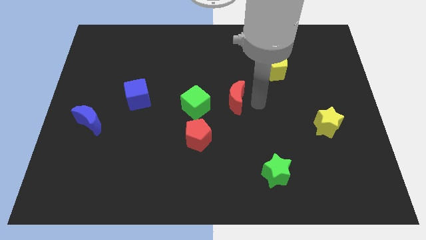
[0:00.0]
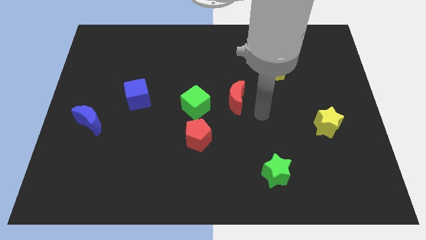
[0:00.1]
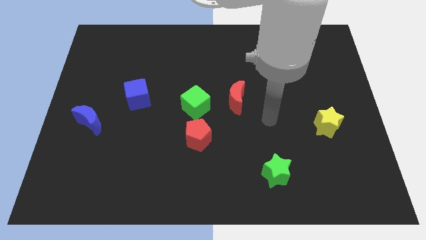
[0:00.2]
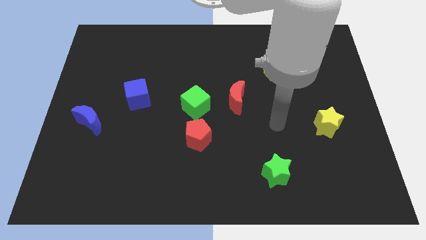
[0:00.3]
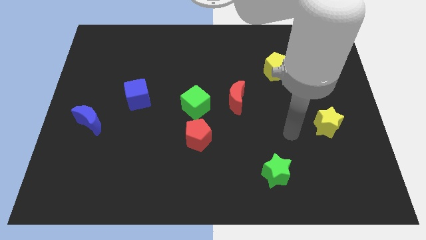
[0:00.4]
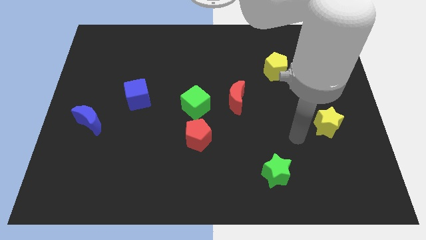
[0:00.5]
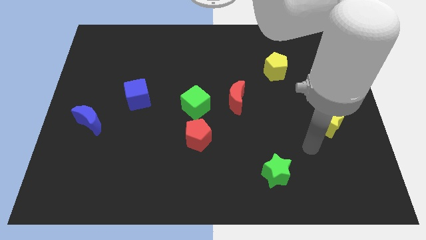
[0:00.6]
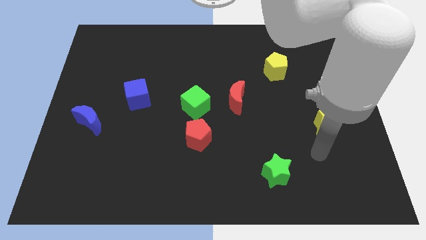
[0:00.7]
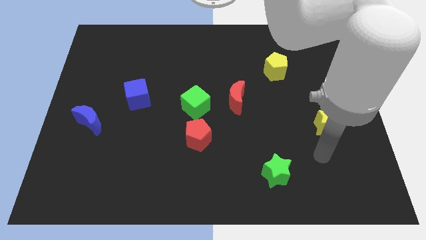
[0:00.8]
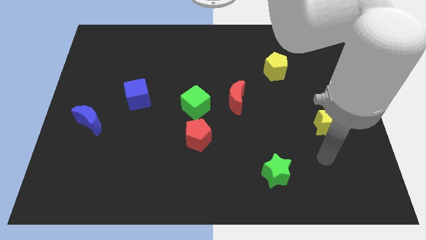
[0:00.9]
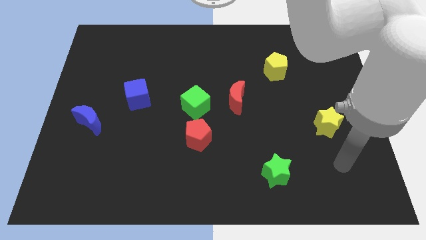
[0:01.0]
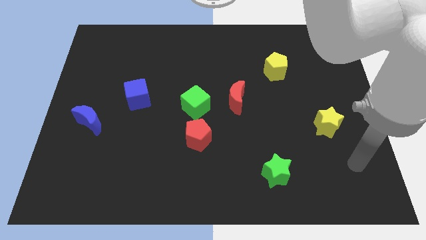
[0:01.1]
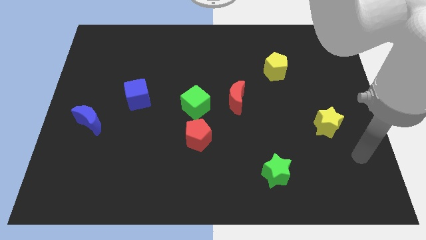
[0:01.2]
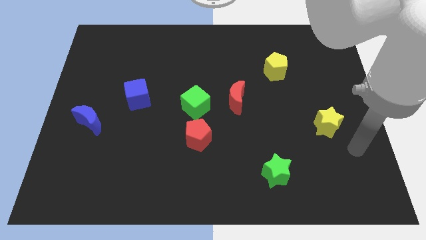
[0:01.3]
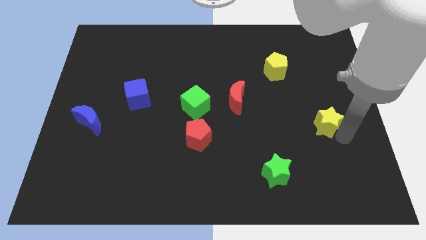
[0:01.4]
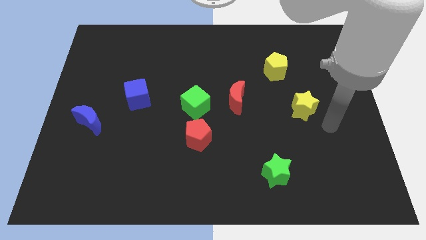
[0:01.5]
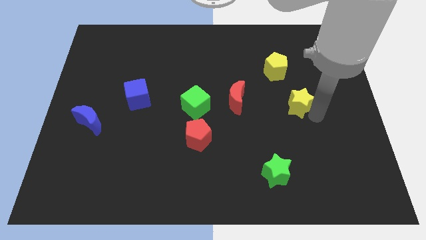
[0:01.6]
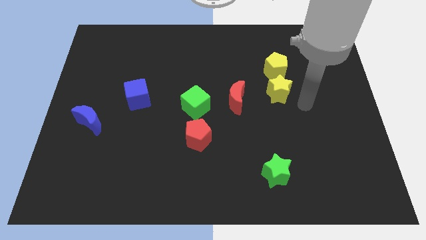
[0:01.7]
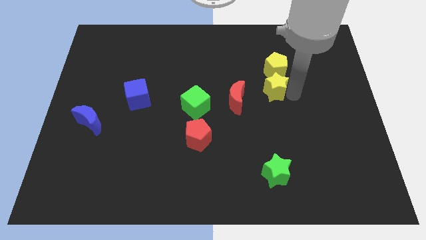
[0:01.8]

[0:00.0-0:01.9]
move the yellow star to the bottom of the yellow pentagon

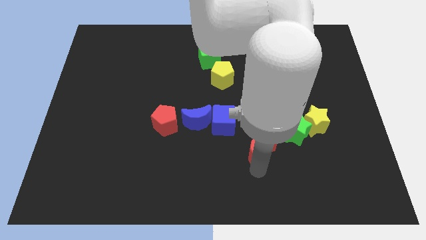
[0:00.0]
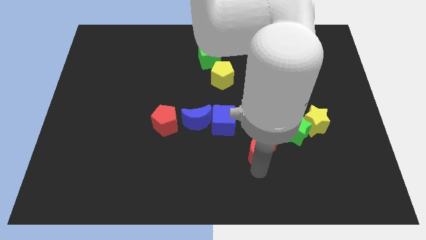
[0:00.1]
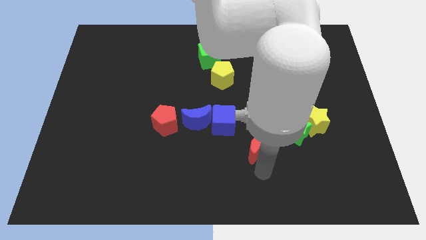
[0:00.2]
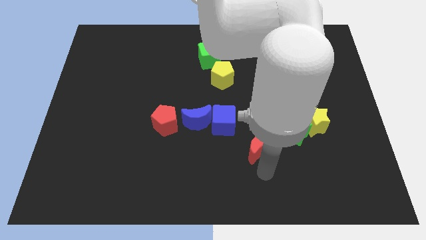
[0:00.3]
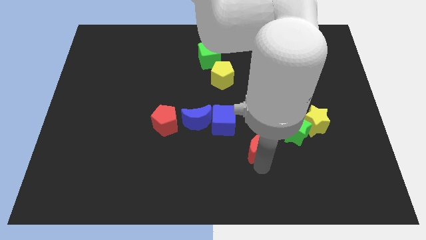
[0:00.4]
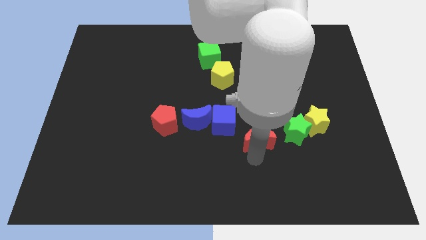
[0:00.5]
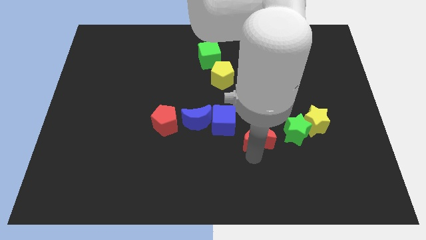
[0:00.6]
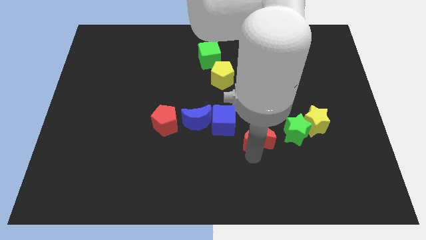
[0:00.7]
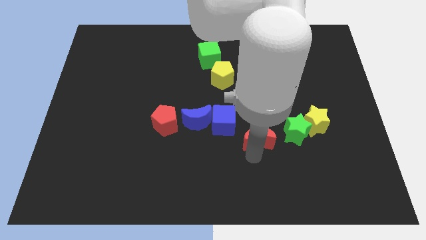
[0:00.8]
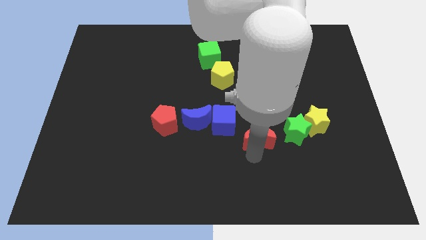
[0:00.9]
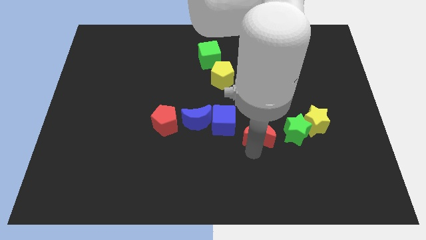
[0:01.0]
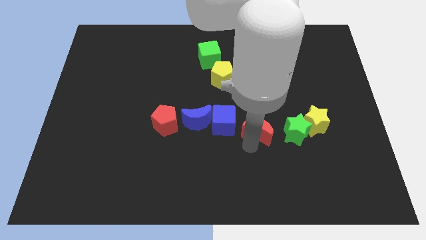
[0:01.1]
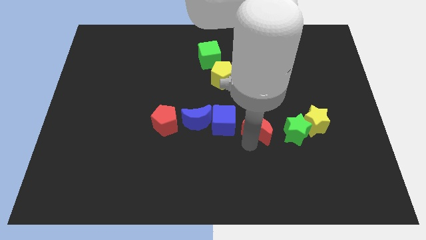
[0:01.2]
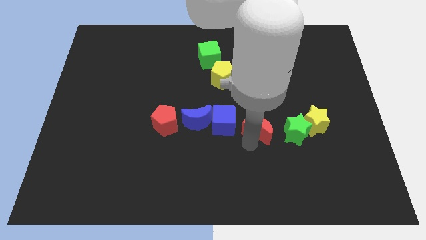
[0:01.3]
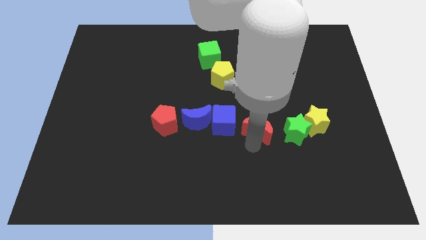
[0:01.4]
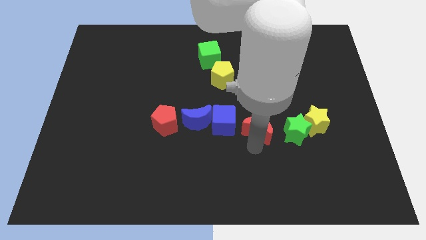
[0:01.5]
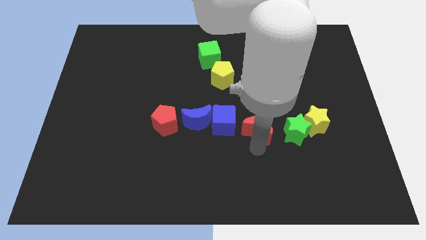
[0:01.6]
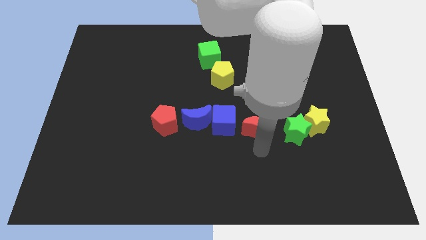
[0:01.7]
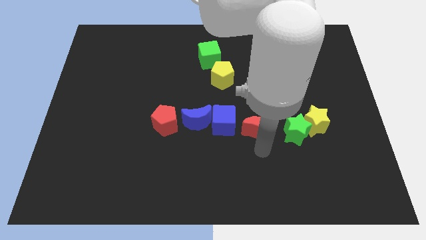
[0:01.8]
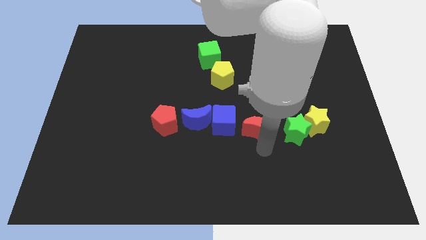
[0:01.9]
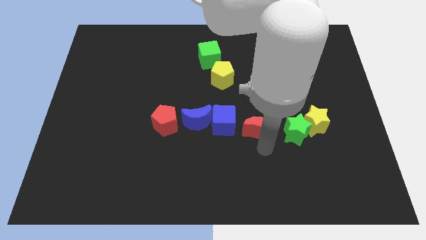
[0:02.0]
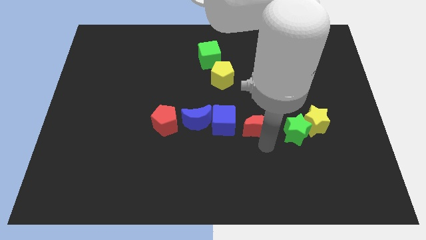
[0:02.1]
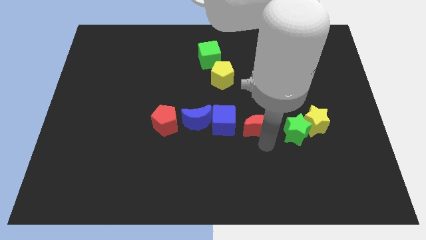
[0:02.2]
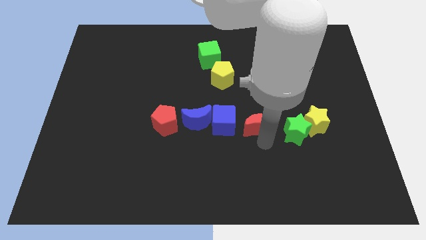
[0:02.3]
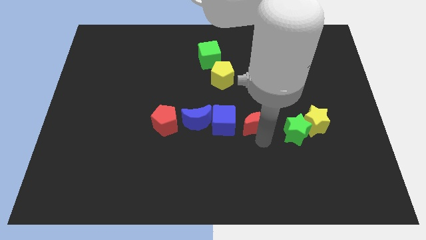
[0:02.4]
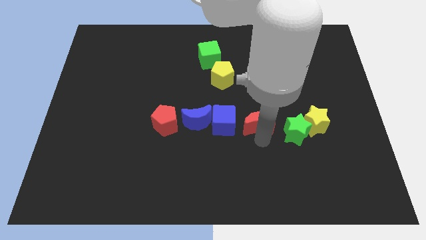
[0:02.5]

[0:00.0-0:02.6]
move the red crescent to the right of the blue cube

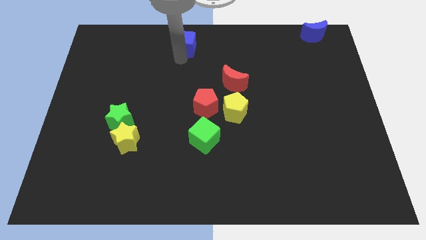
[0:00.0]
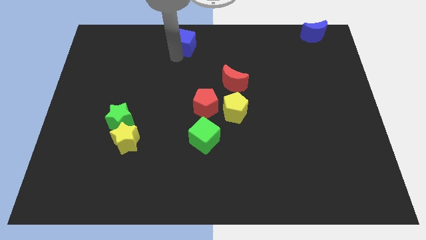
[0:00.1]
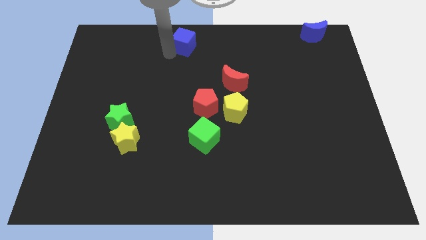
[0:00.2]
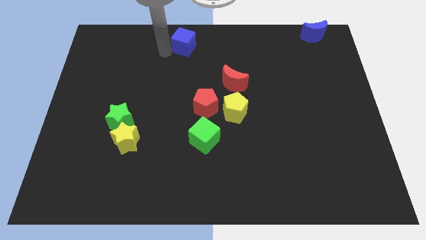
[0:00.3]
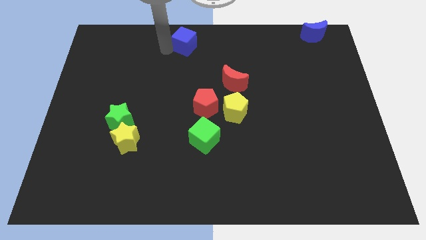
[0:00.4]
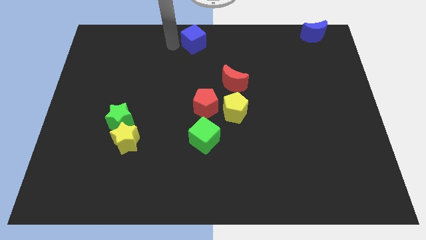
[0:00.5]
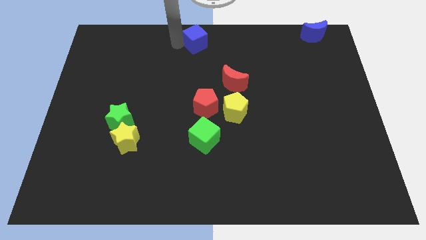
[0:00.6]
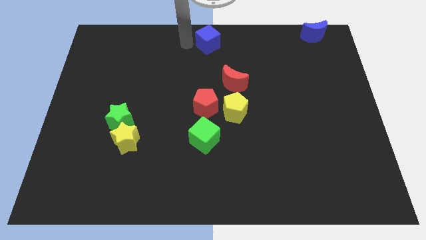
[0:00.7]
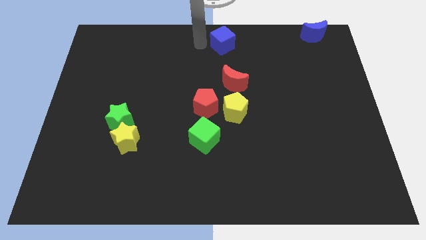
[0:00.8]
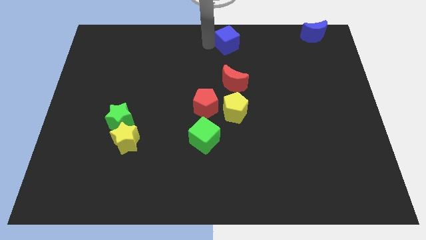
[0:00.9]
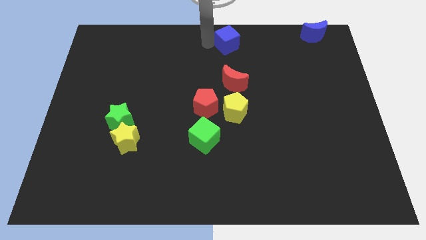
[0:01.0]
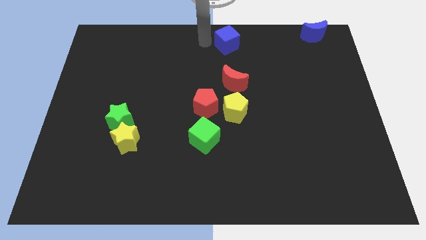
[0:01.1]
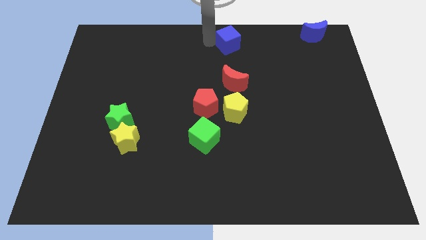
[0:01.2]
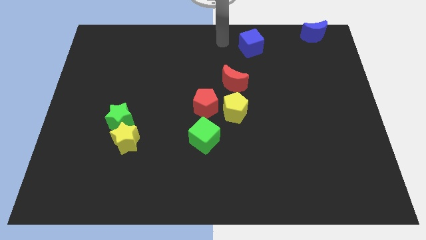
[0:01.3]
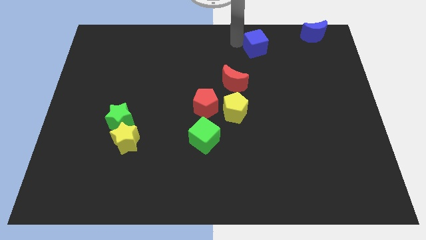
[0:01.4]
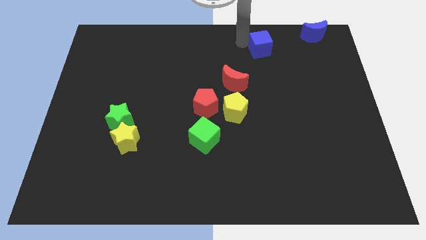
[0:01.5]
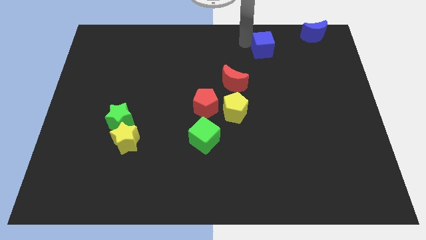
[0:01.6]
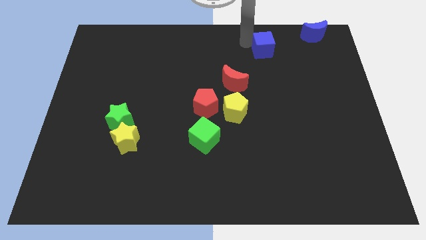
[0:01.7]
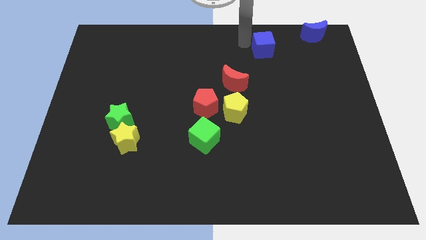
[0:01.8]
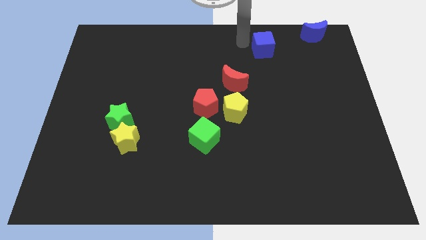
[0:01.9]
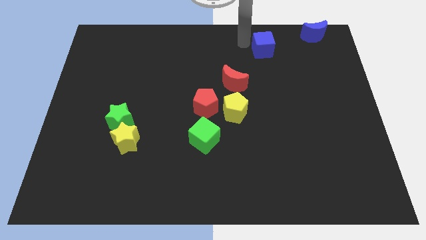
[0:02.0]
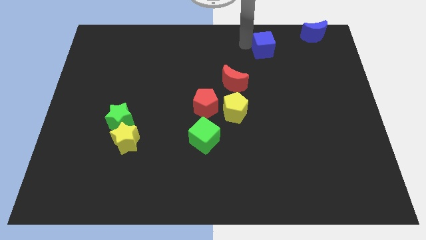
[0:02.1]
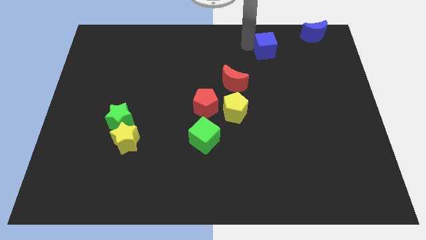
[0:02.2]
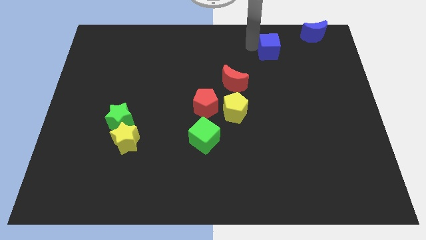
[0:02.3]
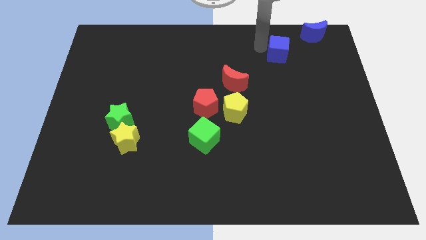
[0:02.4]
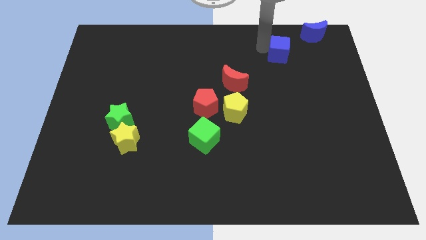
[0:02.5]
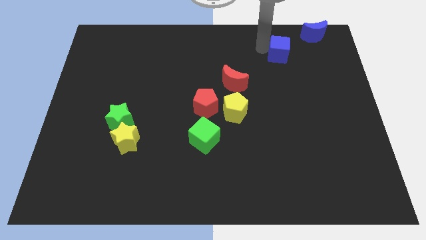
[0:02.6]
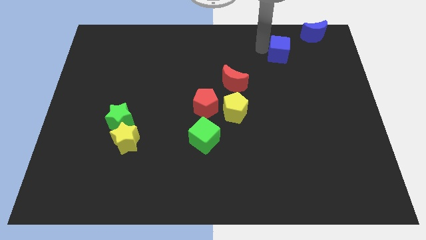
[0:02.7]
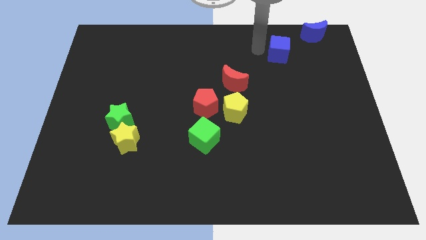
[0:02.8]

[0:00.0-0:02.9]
place the blue cube diagonally in between blue moon and red moon

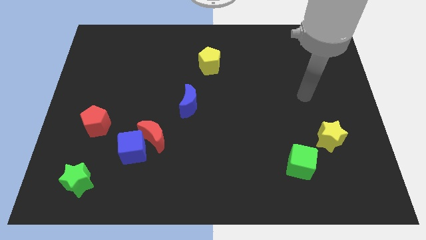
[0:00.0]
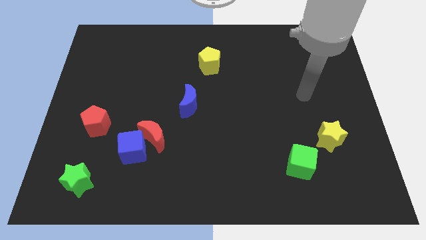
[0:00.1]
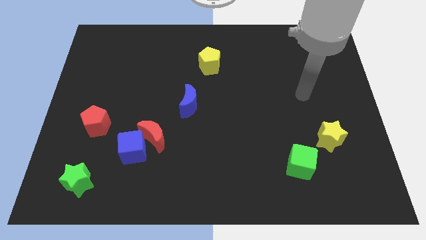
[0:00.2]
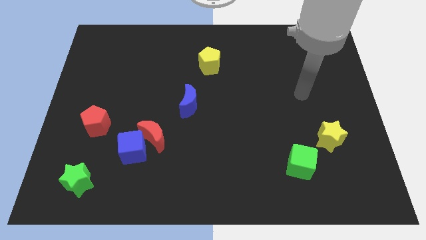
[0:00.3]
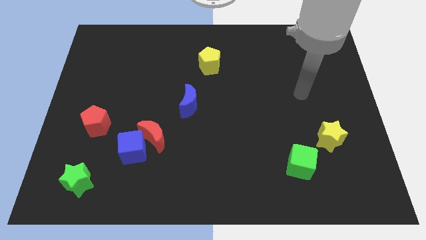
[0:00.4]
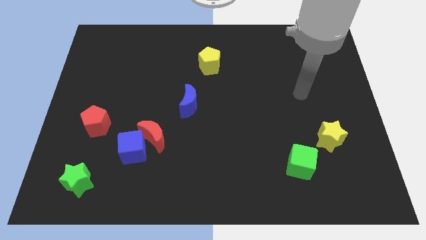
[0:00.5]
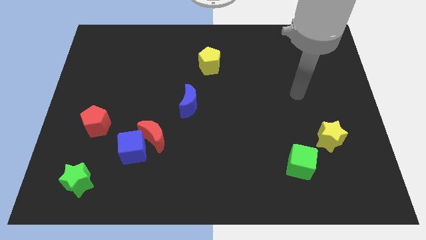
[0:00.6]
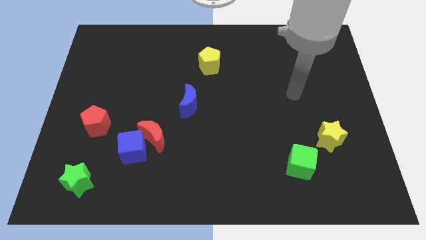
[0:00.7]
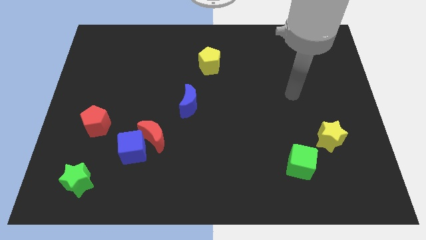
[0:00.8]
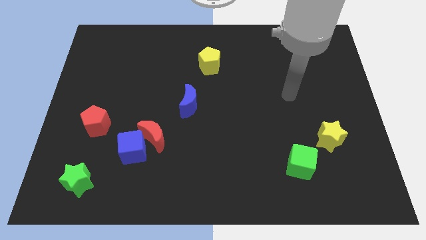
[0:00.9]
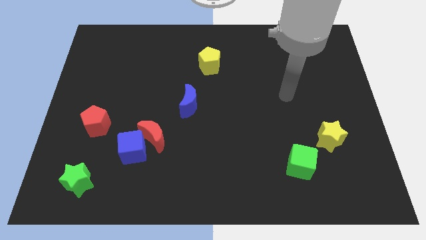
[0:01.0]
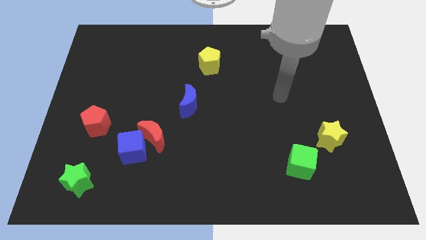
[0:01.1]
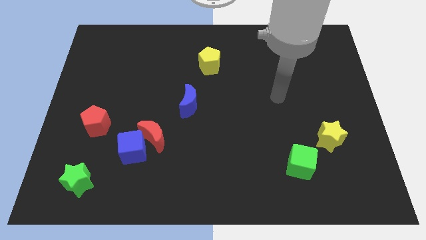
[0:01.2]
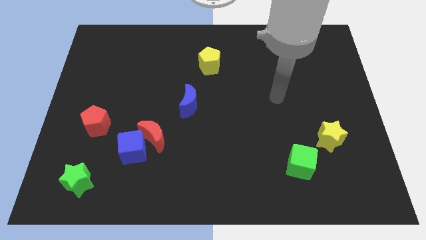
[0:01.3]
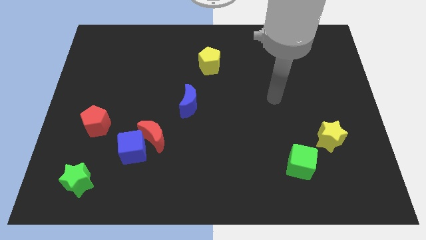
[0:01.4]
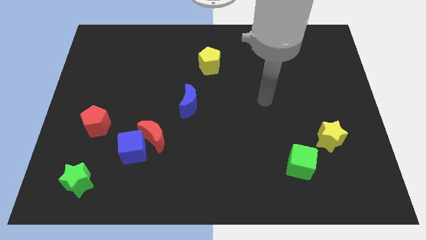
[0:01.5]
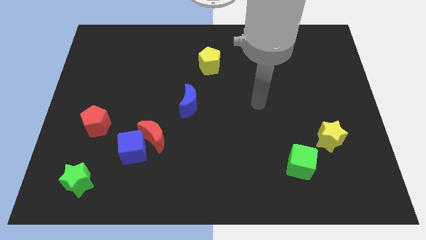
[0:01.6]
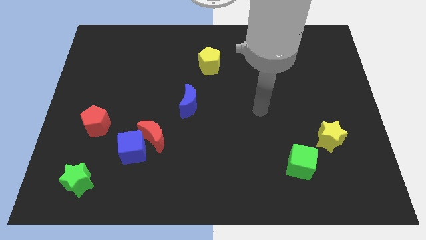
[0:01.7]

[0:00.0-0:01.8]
move the arm towards center
